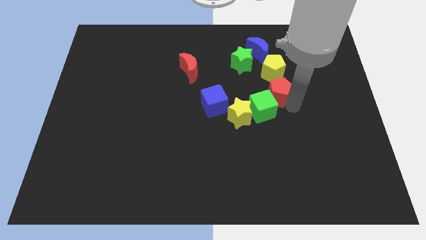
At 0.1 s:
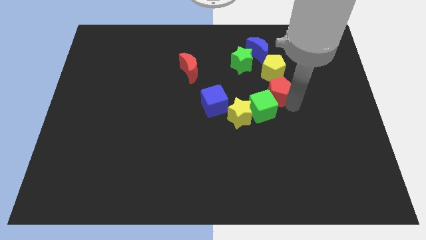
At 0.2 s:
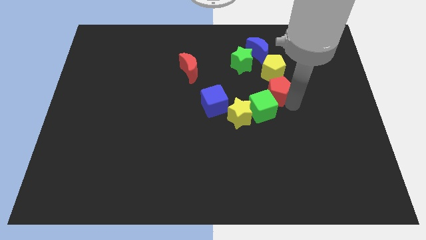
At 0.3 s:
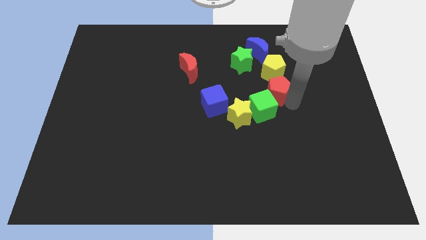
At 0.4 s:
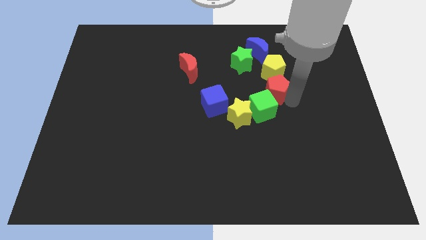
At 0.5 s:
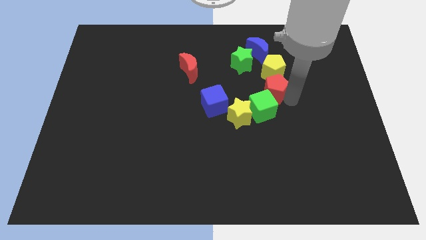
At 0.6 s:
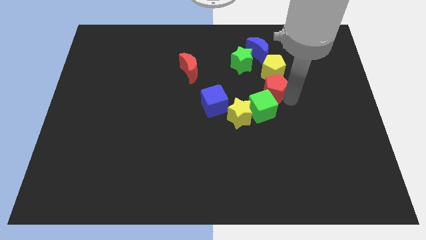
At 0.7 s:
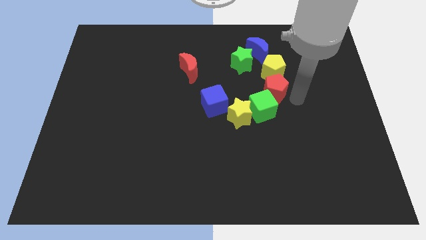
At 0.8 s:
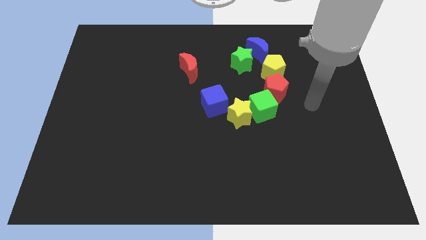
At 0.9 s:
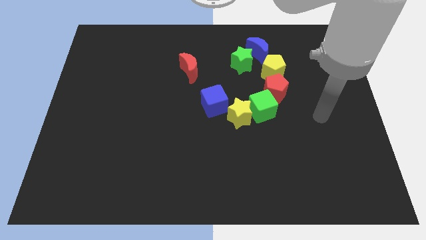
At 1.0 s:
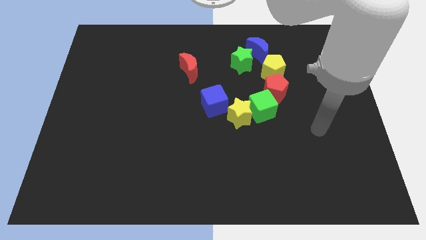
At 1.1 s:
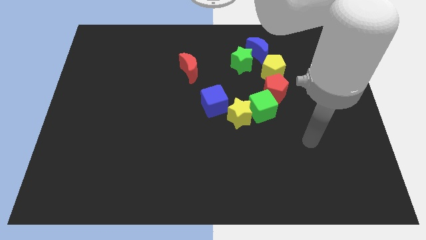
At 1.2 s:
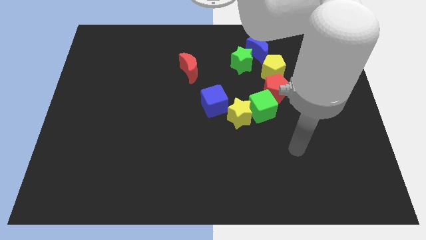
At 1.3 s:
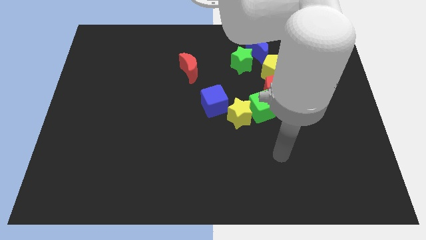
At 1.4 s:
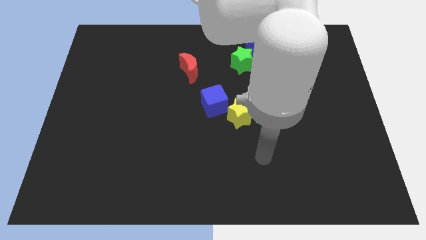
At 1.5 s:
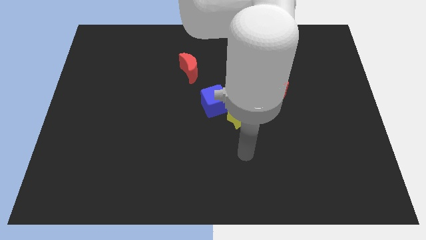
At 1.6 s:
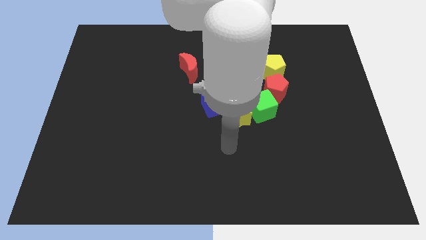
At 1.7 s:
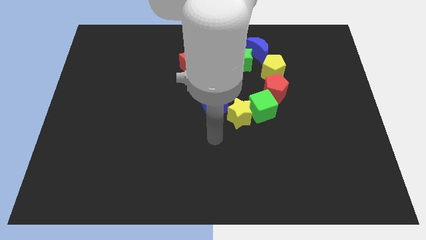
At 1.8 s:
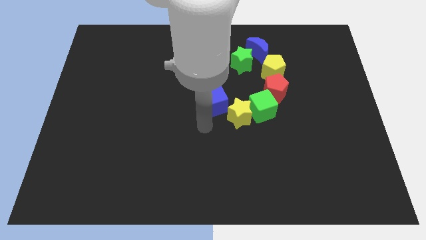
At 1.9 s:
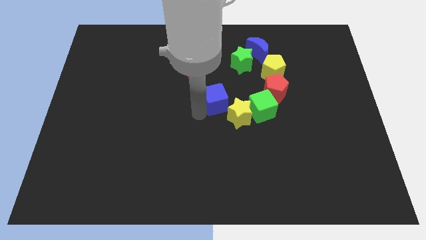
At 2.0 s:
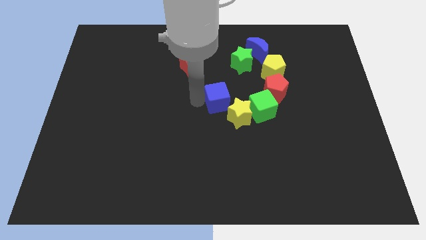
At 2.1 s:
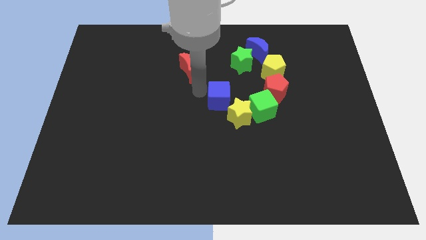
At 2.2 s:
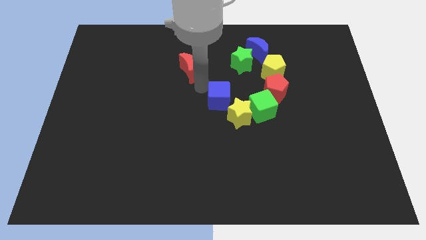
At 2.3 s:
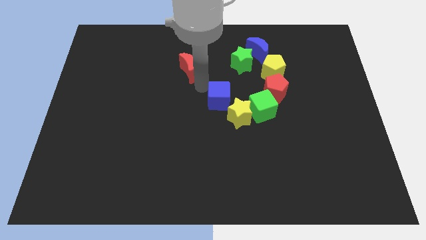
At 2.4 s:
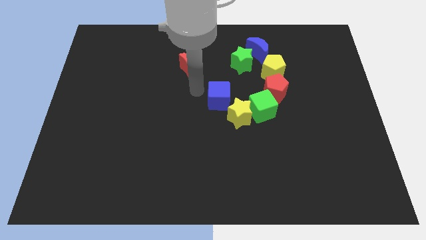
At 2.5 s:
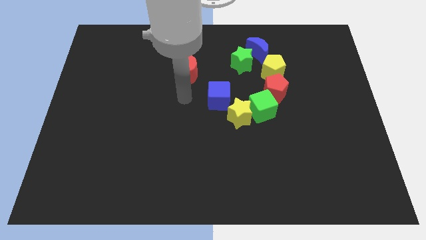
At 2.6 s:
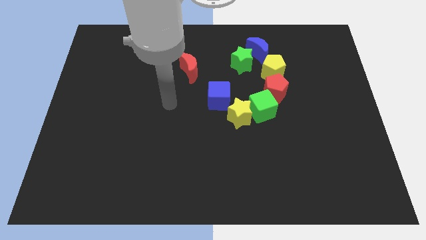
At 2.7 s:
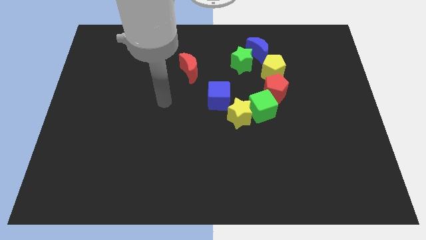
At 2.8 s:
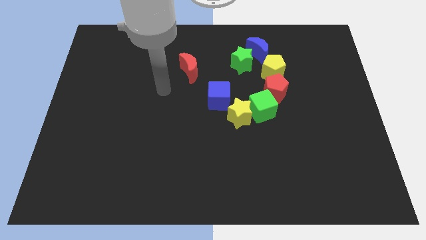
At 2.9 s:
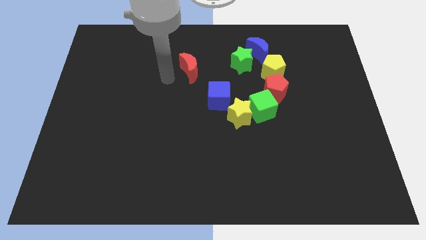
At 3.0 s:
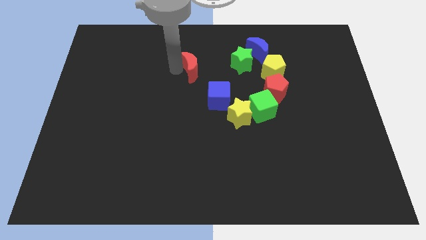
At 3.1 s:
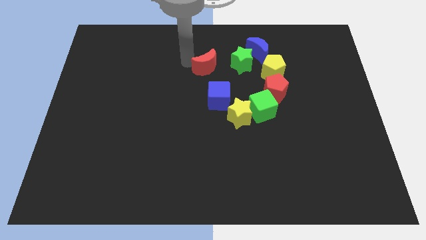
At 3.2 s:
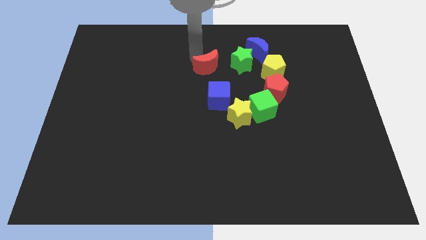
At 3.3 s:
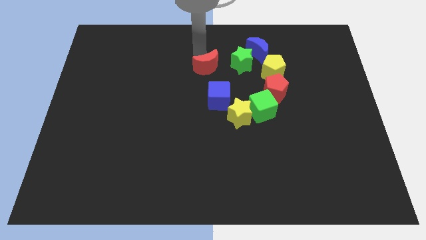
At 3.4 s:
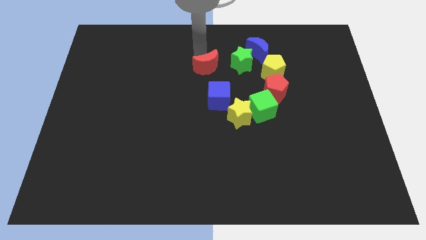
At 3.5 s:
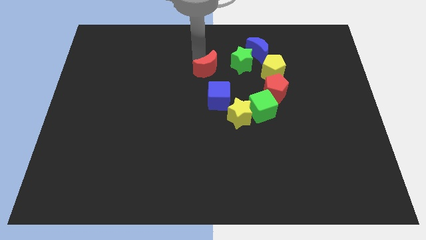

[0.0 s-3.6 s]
place the red moon left to the green star

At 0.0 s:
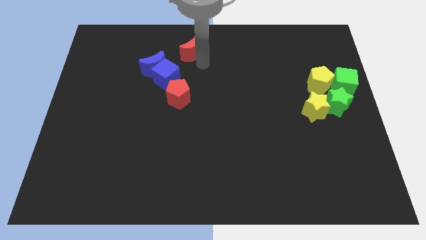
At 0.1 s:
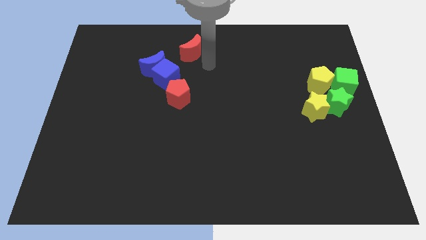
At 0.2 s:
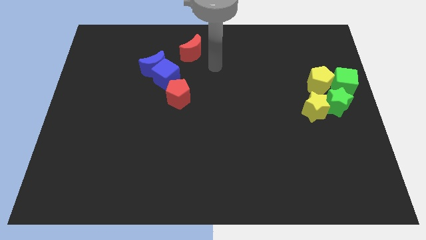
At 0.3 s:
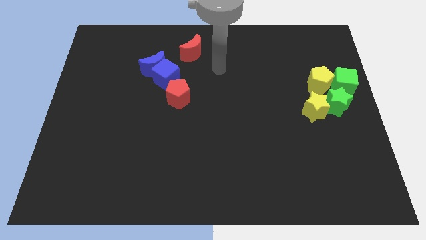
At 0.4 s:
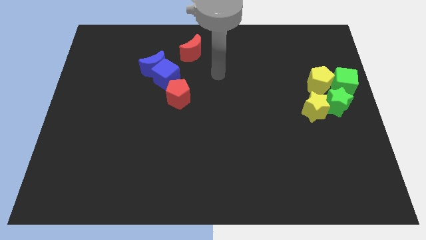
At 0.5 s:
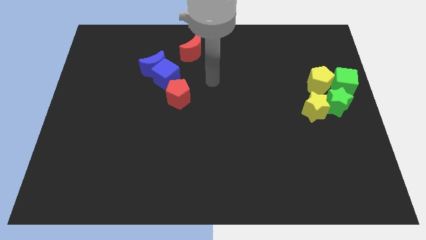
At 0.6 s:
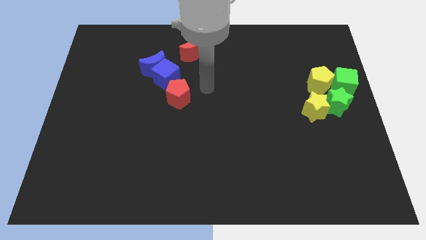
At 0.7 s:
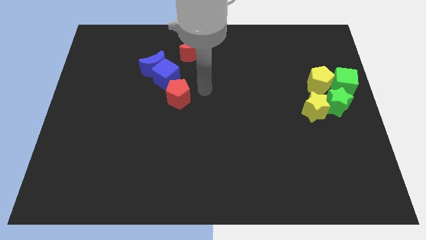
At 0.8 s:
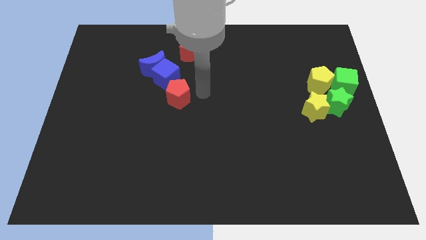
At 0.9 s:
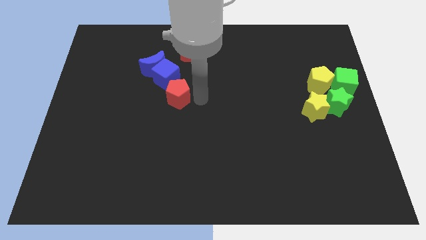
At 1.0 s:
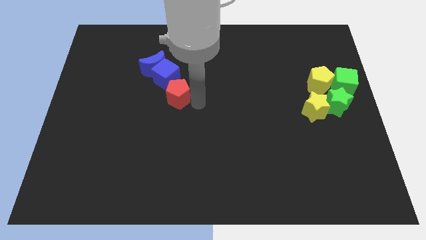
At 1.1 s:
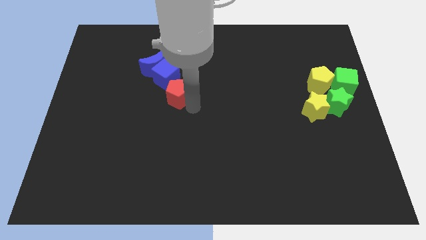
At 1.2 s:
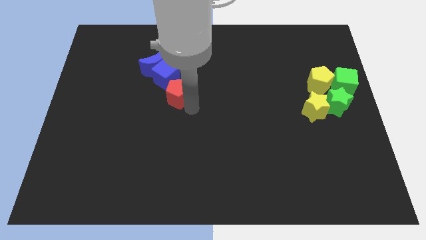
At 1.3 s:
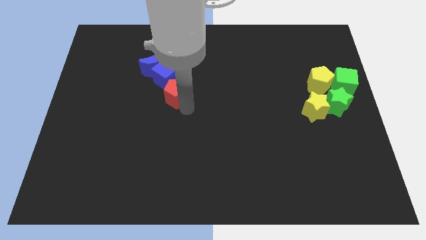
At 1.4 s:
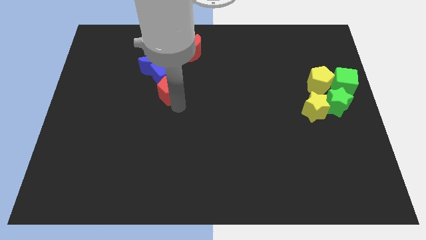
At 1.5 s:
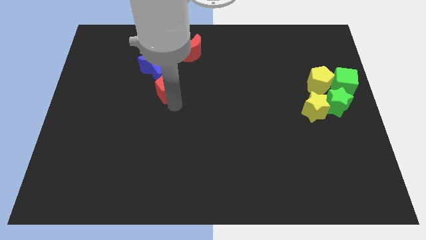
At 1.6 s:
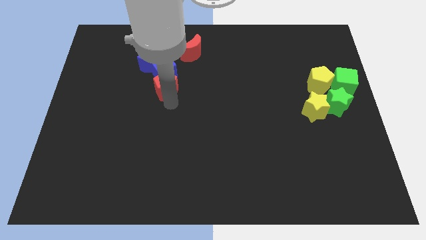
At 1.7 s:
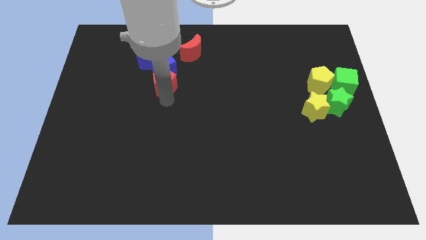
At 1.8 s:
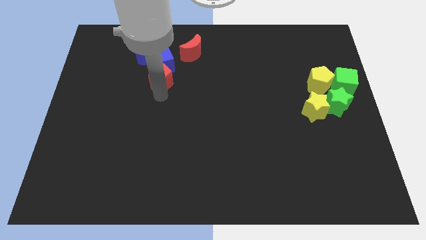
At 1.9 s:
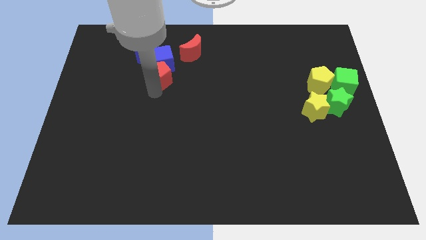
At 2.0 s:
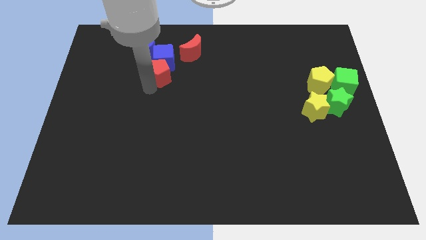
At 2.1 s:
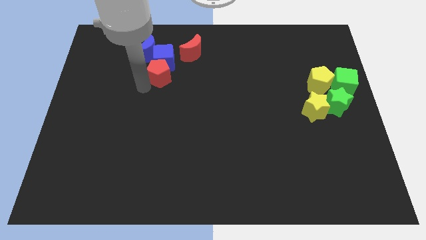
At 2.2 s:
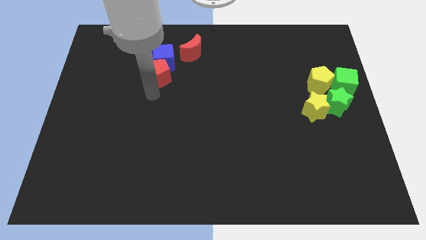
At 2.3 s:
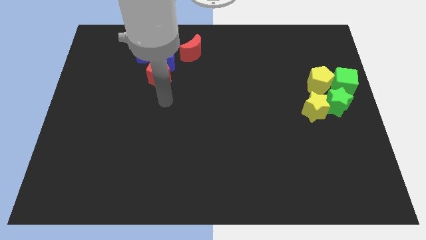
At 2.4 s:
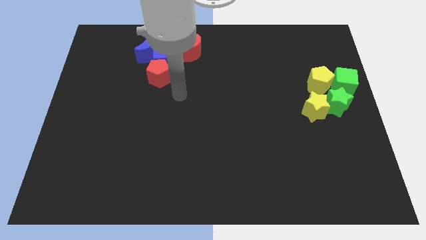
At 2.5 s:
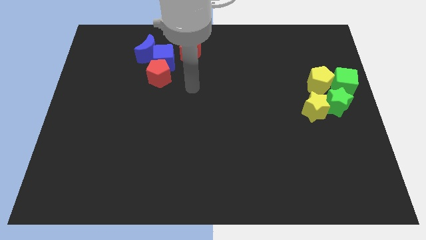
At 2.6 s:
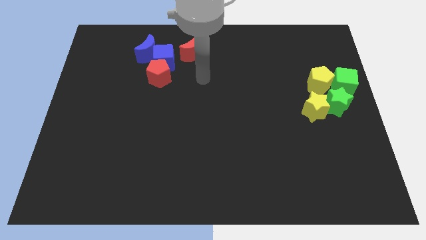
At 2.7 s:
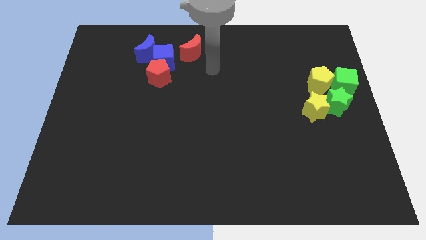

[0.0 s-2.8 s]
move the red pentagon into the blue cube

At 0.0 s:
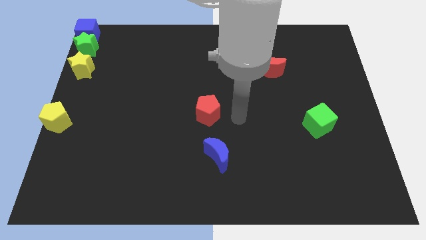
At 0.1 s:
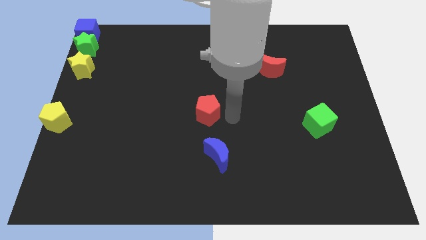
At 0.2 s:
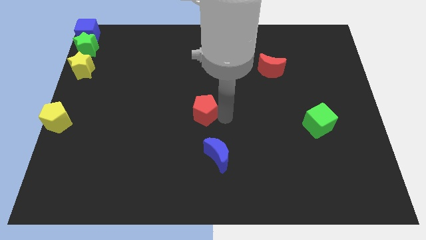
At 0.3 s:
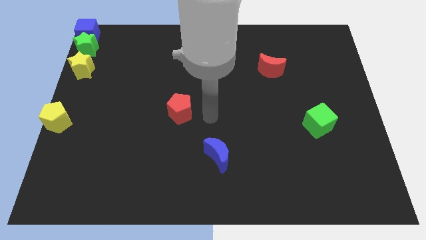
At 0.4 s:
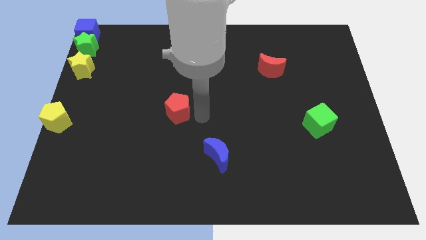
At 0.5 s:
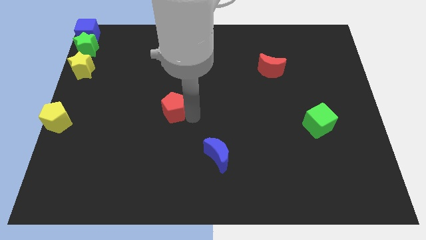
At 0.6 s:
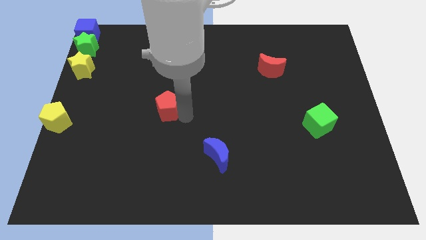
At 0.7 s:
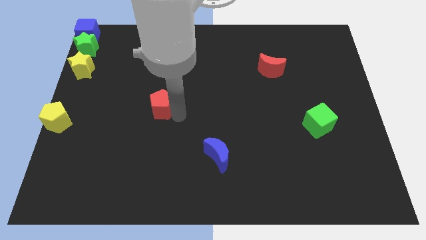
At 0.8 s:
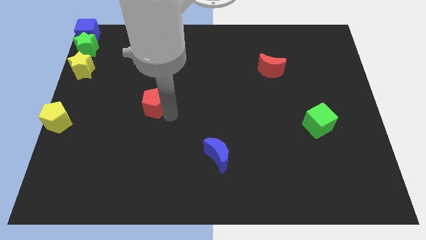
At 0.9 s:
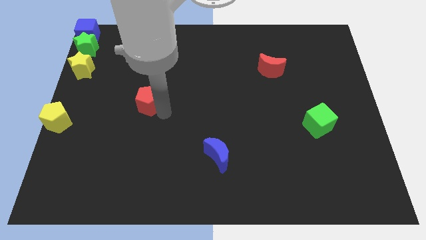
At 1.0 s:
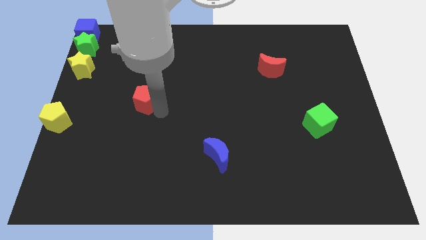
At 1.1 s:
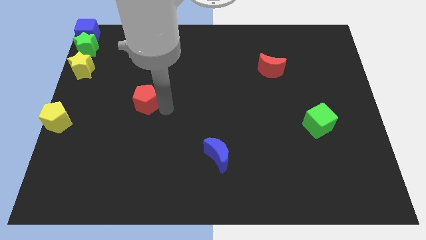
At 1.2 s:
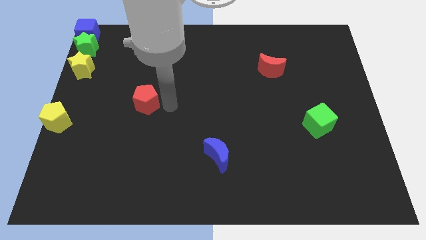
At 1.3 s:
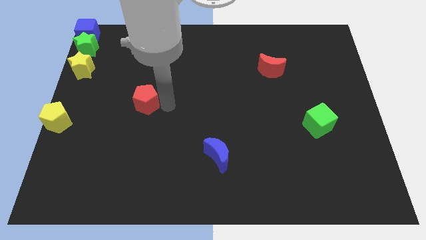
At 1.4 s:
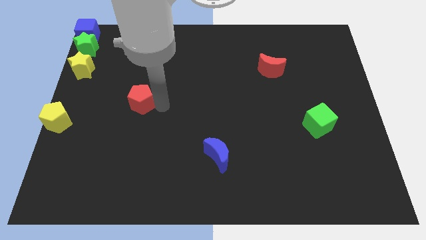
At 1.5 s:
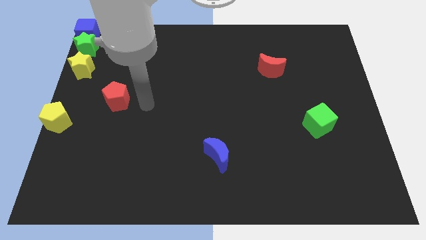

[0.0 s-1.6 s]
push the red pentagon to the left side of the board

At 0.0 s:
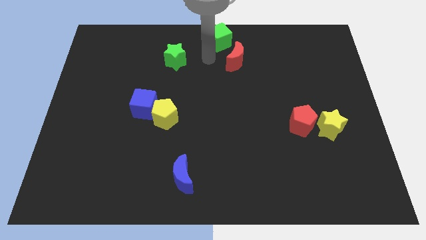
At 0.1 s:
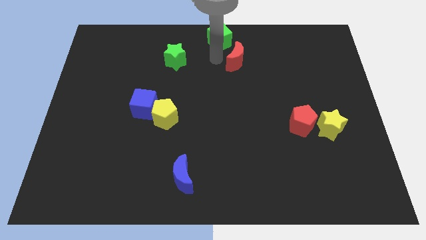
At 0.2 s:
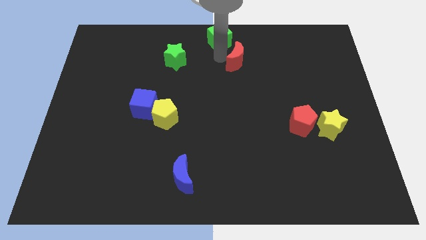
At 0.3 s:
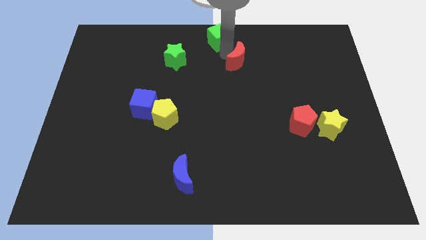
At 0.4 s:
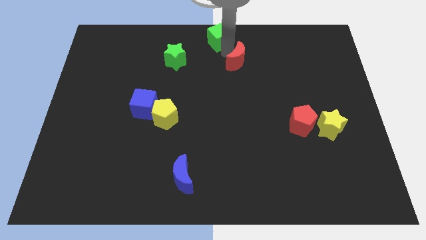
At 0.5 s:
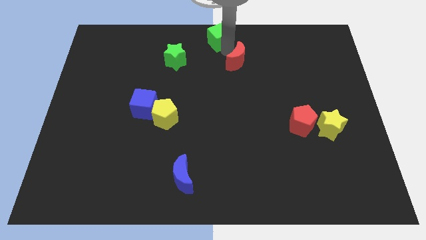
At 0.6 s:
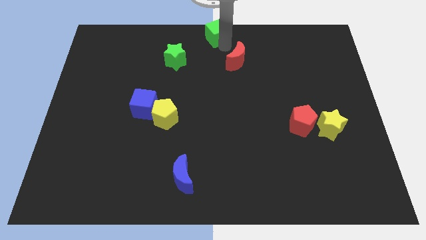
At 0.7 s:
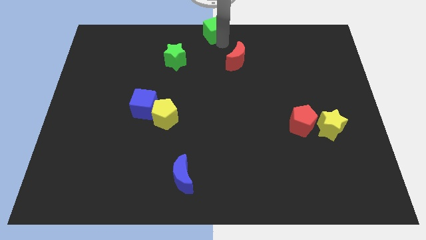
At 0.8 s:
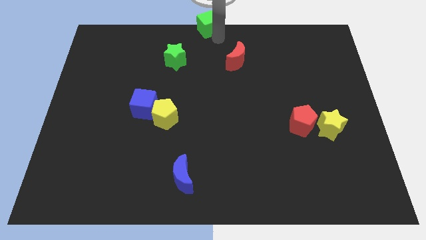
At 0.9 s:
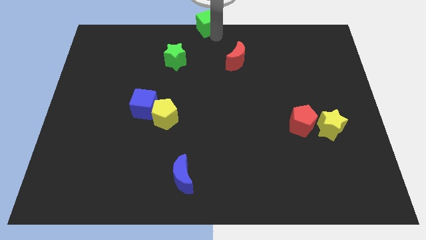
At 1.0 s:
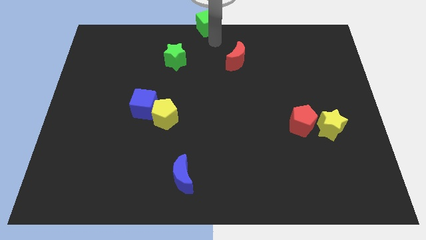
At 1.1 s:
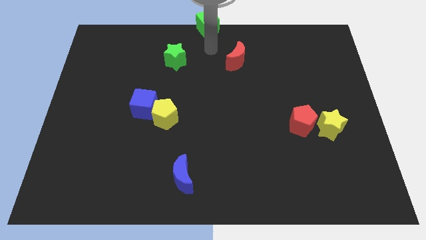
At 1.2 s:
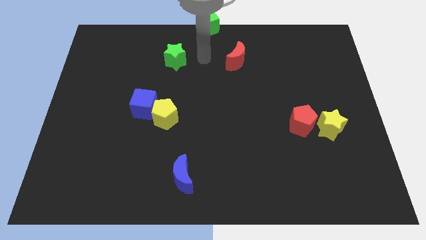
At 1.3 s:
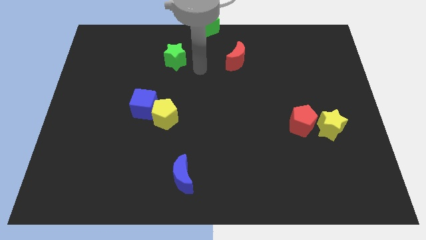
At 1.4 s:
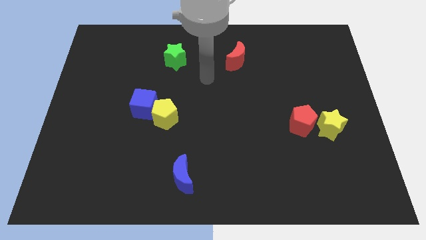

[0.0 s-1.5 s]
move the green cube to the top center
